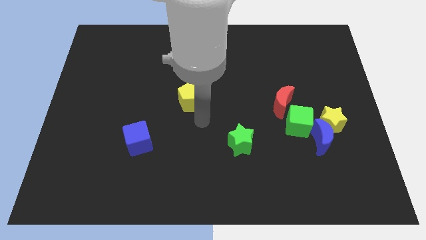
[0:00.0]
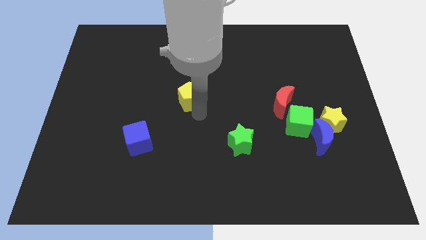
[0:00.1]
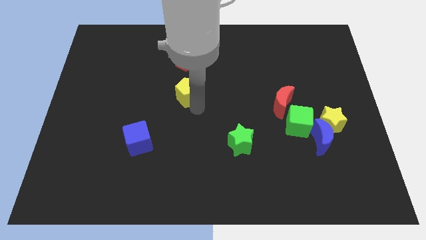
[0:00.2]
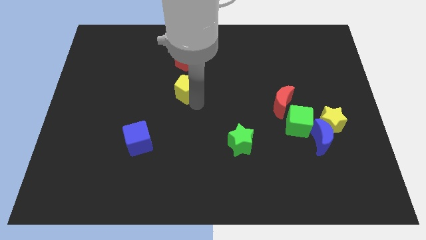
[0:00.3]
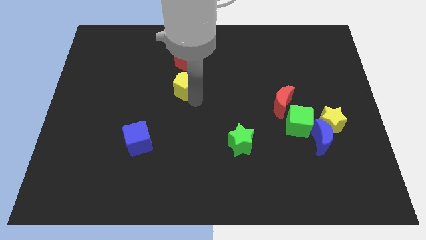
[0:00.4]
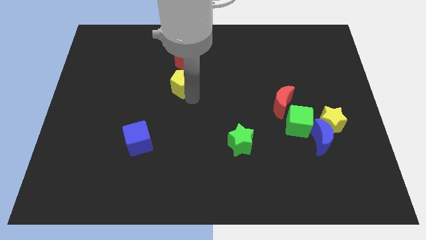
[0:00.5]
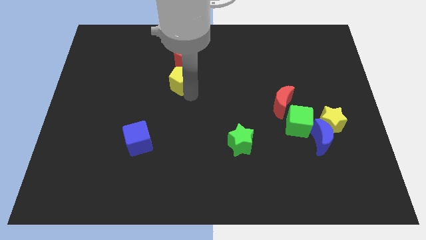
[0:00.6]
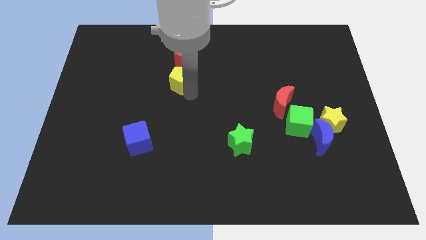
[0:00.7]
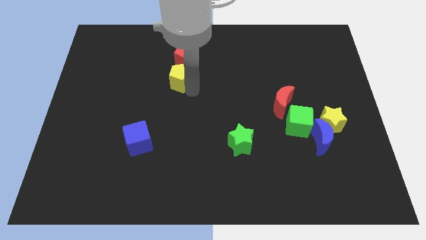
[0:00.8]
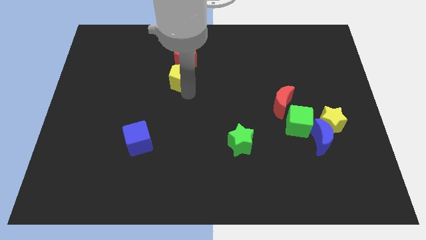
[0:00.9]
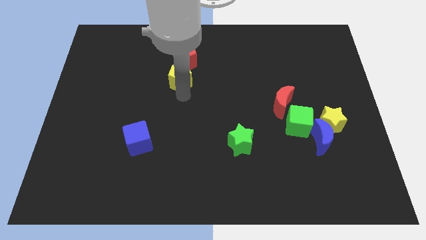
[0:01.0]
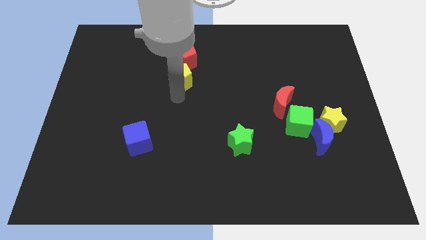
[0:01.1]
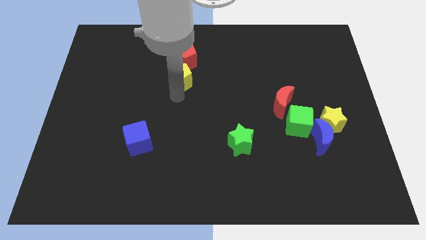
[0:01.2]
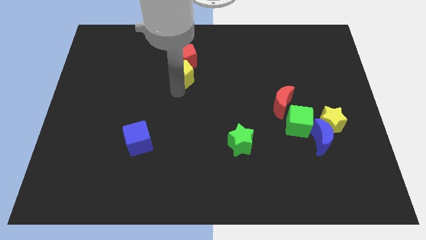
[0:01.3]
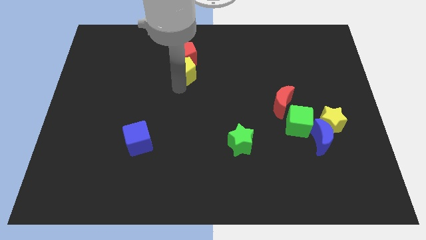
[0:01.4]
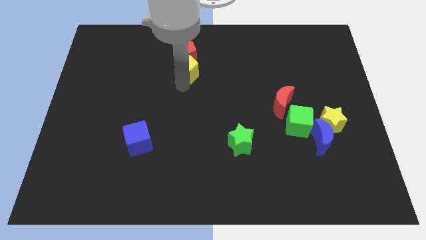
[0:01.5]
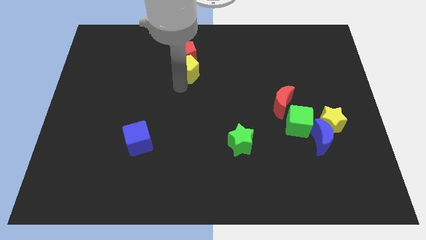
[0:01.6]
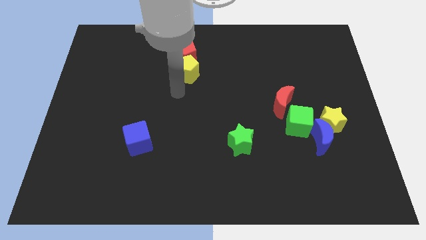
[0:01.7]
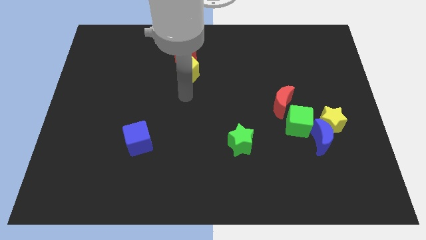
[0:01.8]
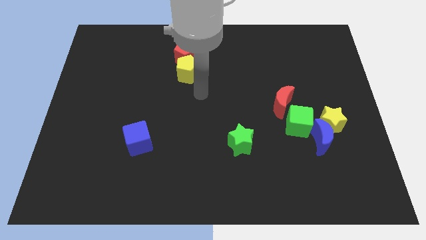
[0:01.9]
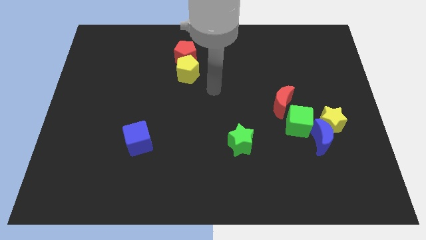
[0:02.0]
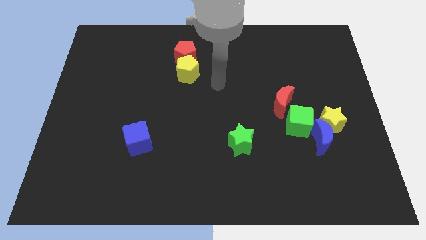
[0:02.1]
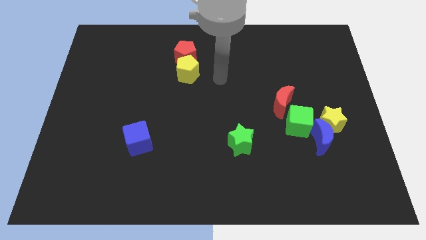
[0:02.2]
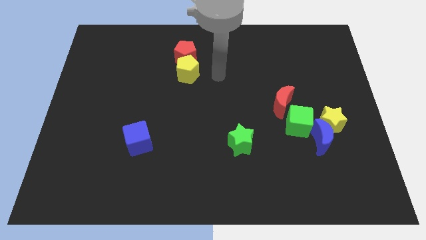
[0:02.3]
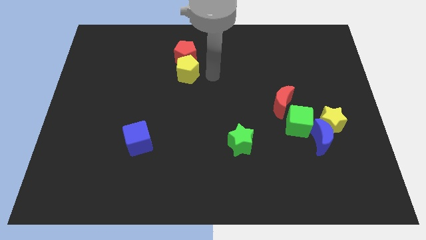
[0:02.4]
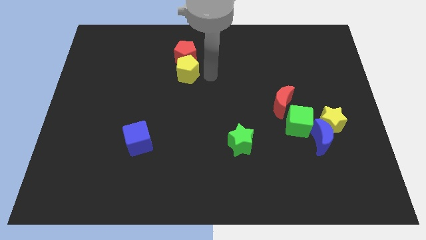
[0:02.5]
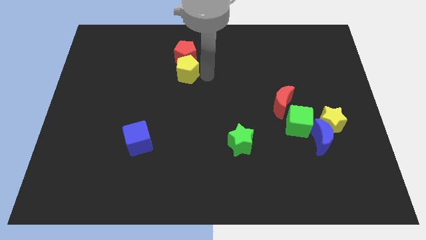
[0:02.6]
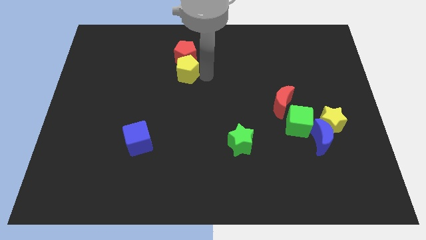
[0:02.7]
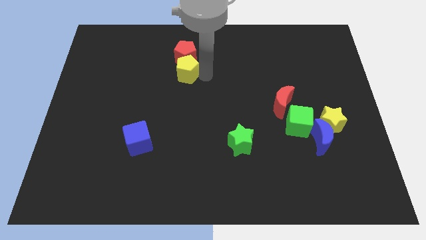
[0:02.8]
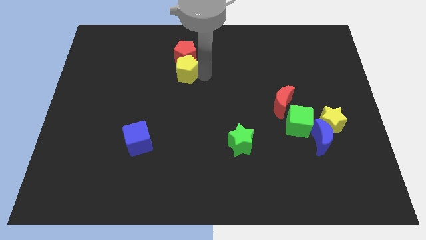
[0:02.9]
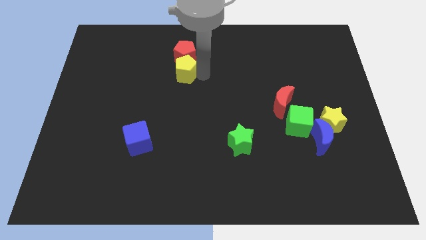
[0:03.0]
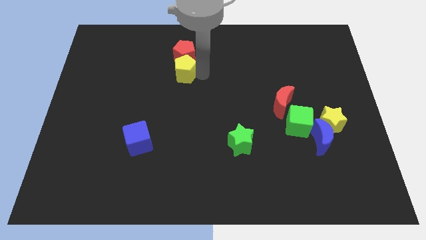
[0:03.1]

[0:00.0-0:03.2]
push the yellow pentagon towards red pentagon

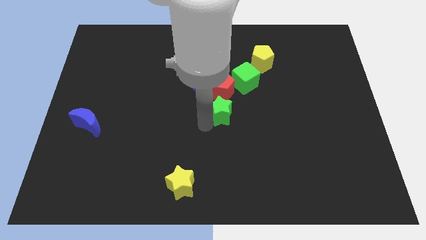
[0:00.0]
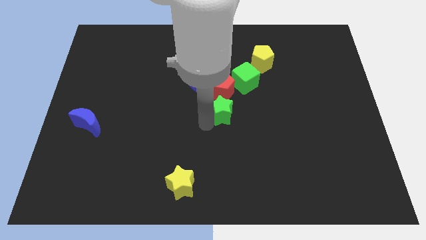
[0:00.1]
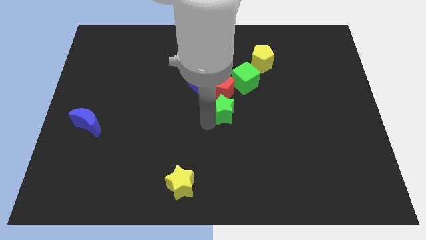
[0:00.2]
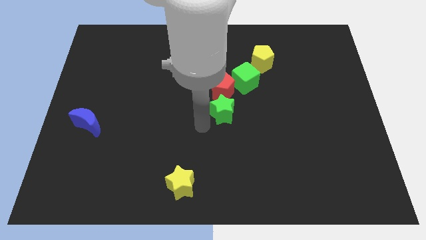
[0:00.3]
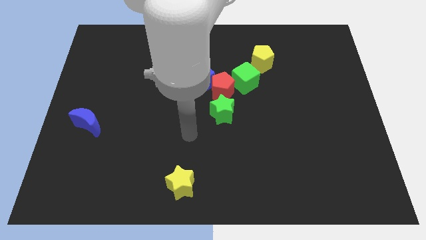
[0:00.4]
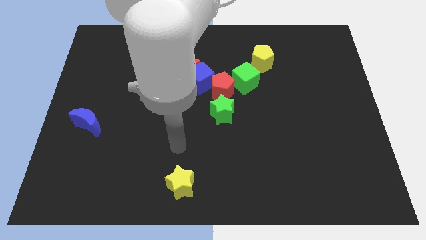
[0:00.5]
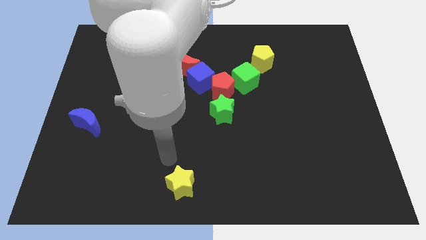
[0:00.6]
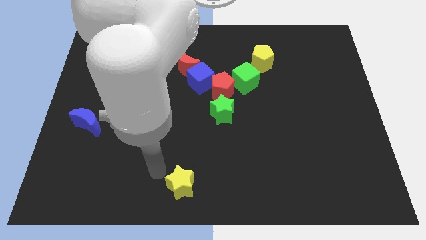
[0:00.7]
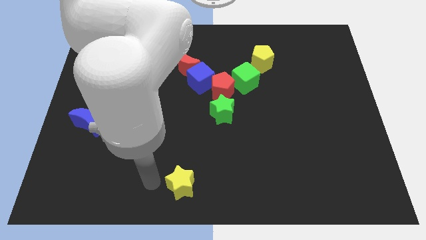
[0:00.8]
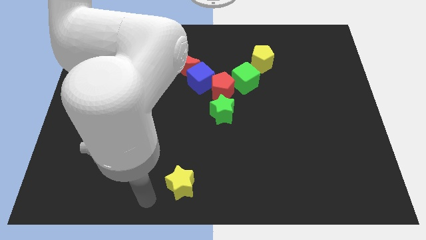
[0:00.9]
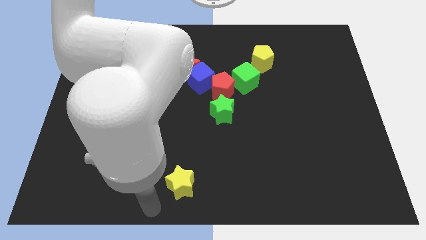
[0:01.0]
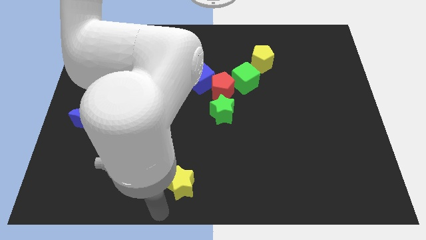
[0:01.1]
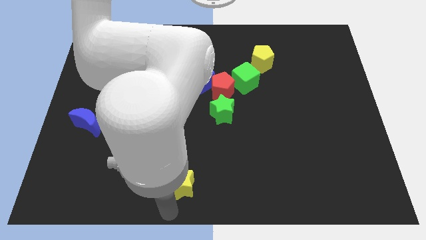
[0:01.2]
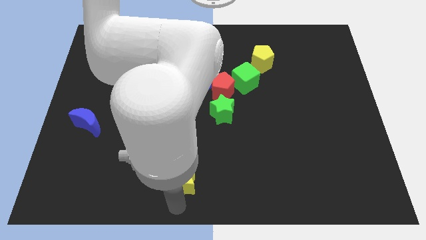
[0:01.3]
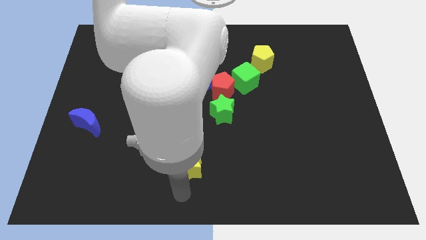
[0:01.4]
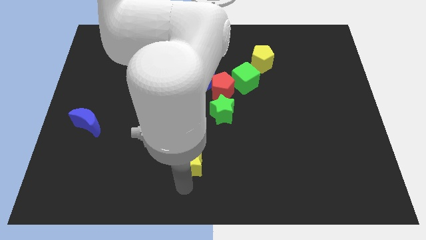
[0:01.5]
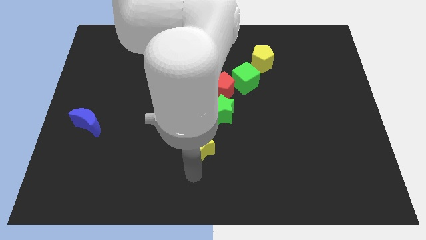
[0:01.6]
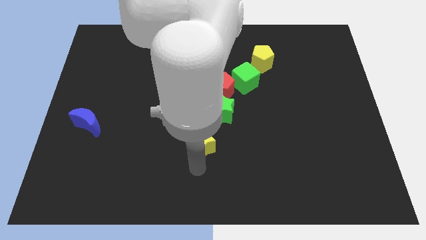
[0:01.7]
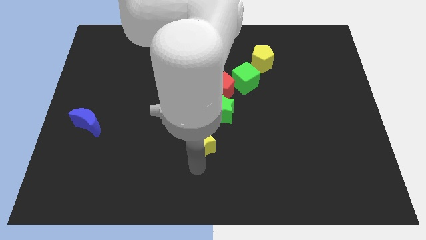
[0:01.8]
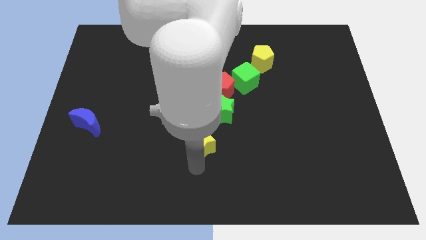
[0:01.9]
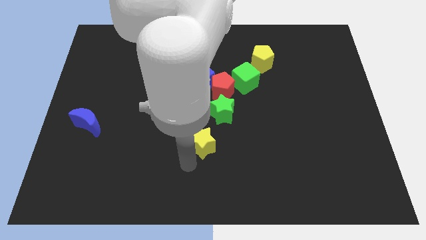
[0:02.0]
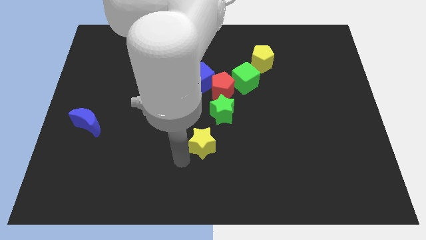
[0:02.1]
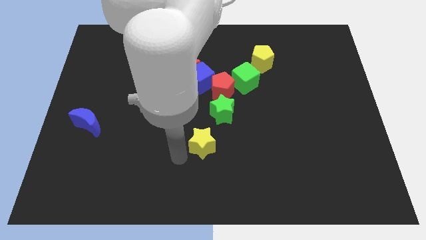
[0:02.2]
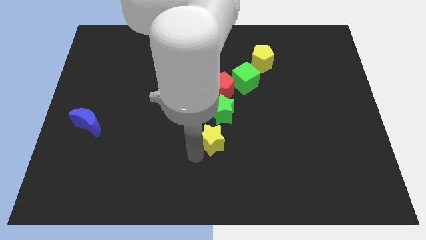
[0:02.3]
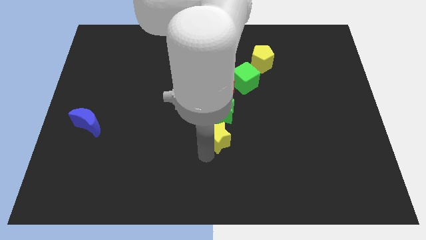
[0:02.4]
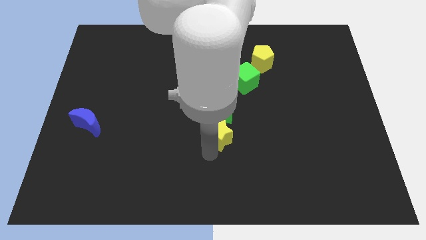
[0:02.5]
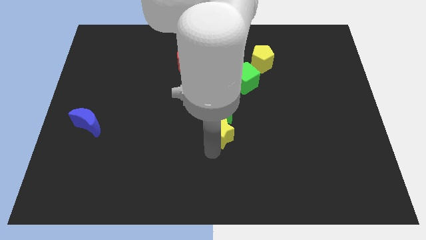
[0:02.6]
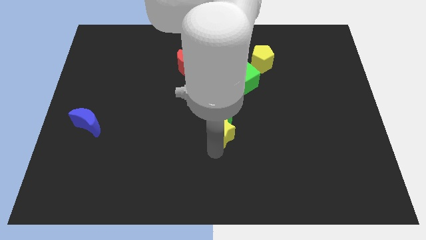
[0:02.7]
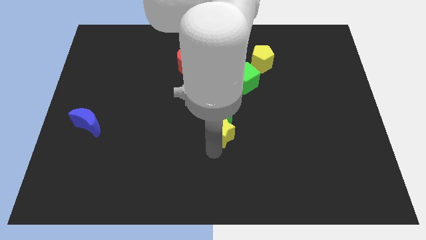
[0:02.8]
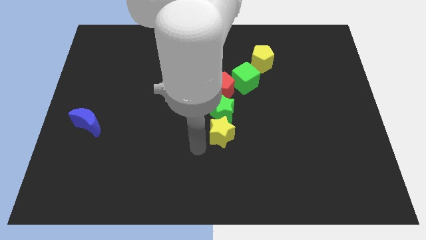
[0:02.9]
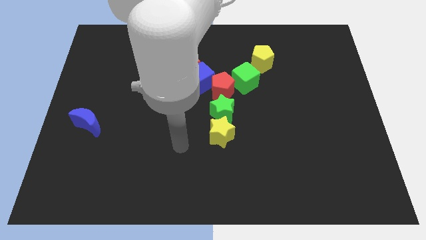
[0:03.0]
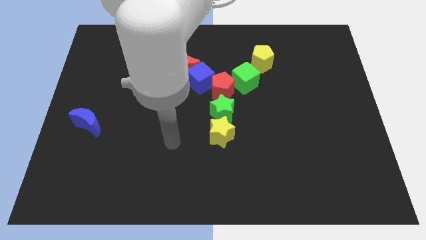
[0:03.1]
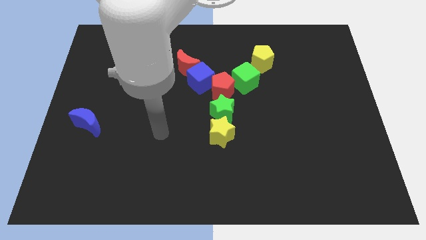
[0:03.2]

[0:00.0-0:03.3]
place the yellow star below the green star

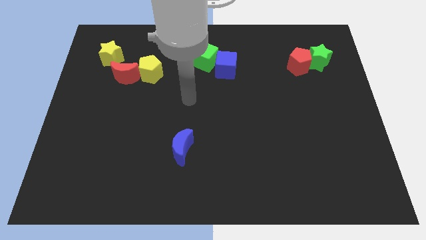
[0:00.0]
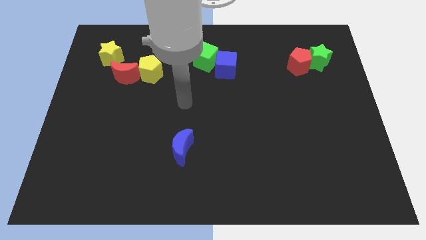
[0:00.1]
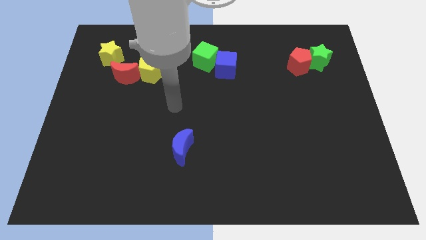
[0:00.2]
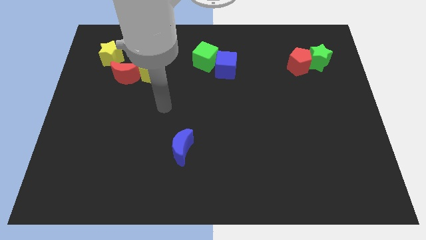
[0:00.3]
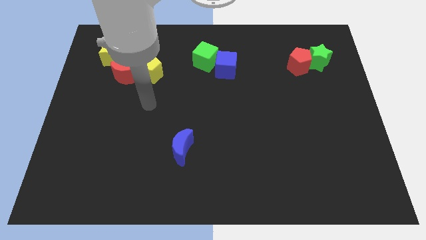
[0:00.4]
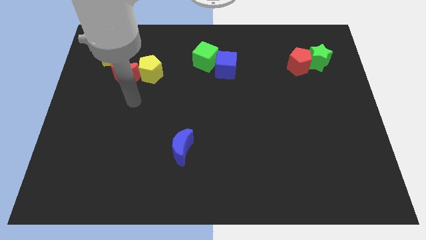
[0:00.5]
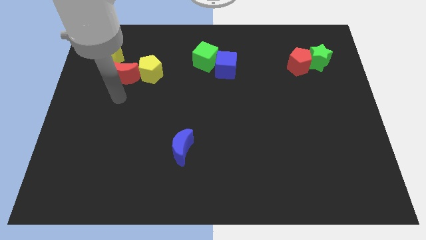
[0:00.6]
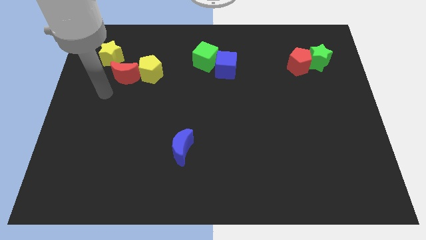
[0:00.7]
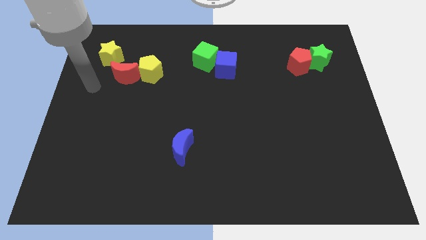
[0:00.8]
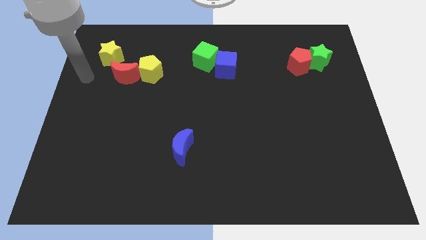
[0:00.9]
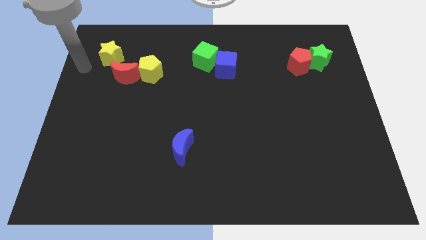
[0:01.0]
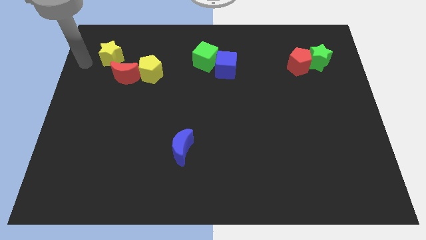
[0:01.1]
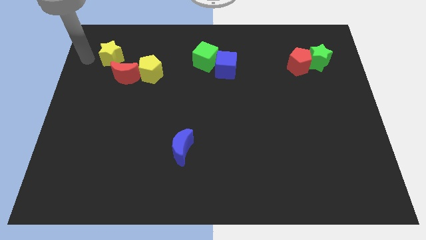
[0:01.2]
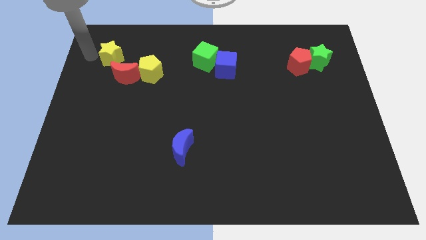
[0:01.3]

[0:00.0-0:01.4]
move arm near yellow star

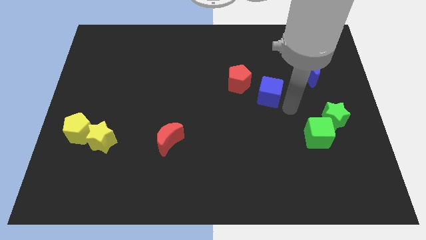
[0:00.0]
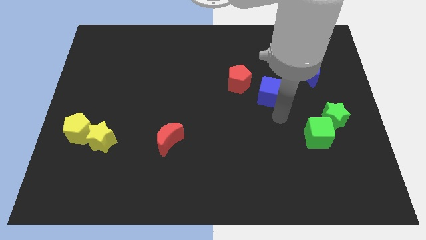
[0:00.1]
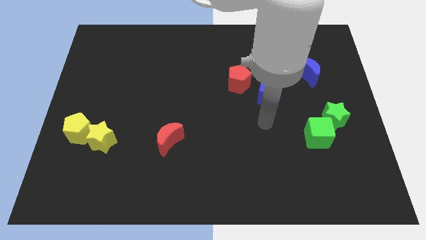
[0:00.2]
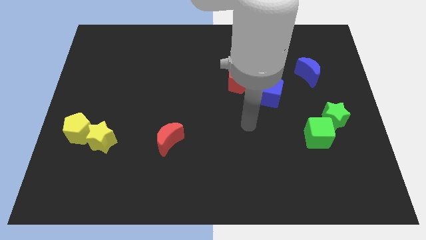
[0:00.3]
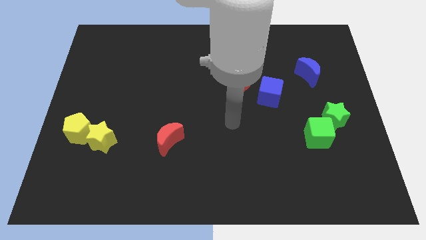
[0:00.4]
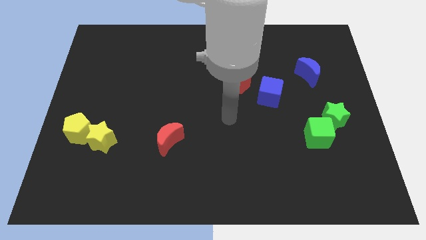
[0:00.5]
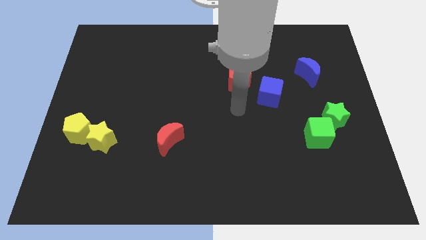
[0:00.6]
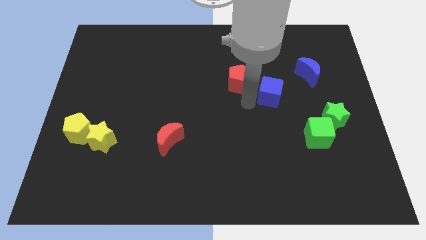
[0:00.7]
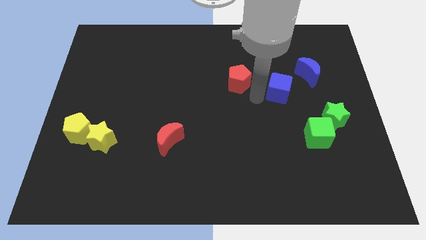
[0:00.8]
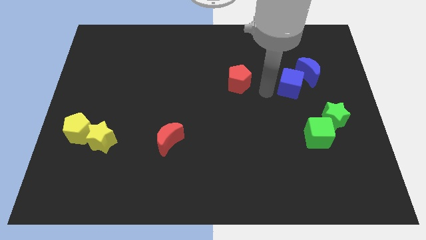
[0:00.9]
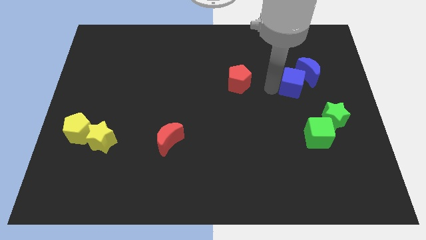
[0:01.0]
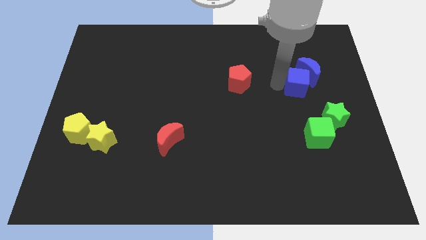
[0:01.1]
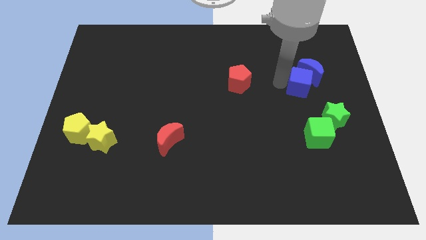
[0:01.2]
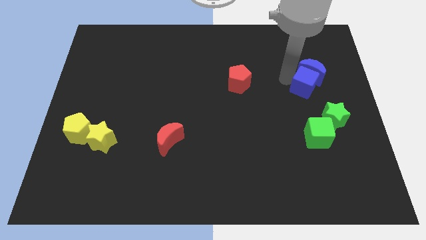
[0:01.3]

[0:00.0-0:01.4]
push the blue cube close to the blue crescent
